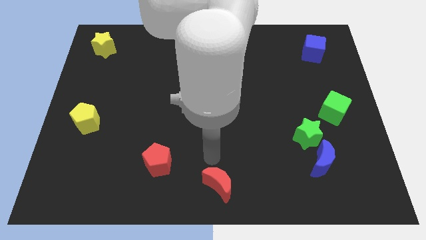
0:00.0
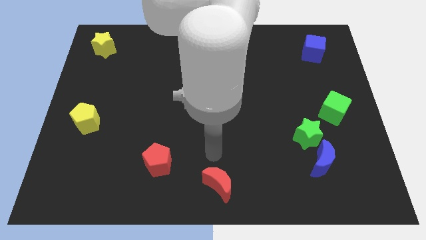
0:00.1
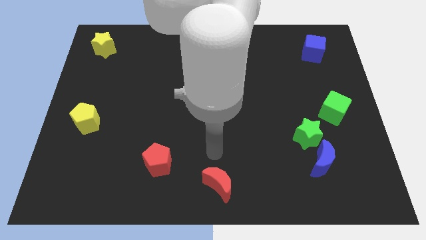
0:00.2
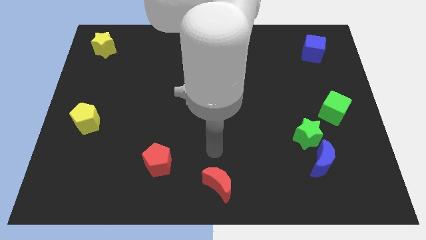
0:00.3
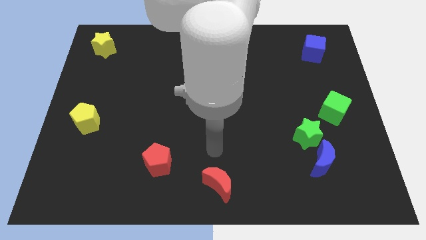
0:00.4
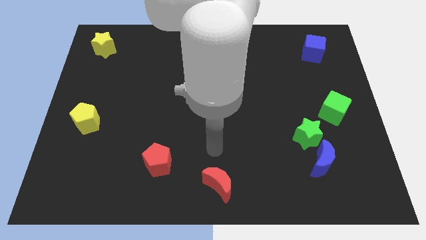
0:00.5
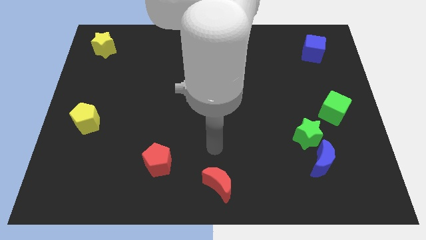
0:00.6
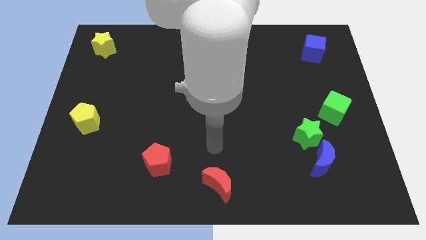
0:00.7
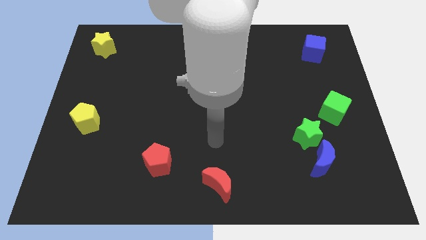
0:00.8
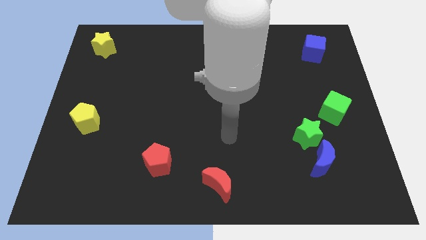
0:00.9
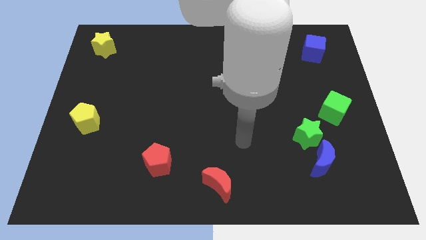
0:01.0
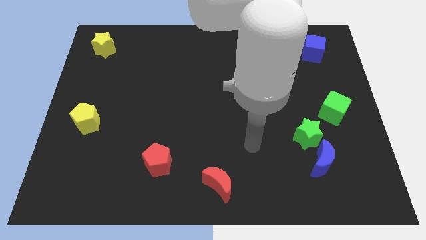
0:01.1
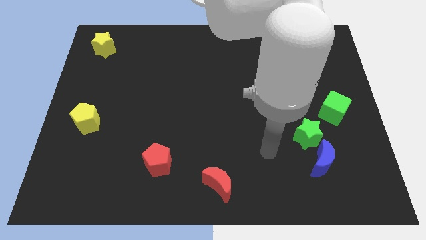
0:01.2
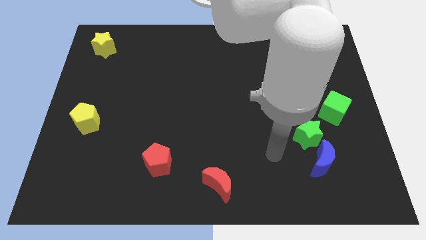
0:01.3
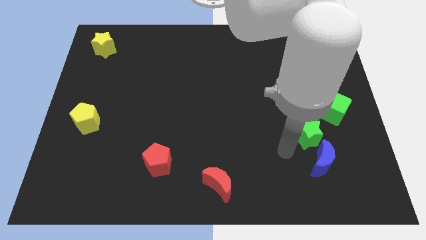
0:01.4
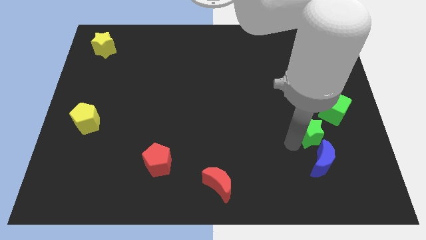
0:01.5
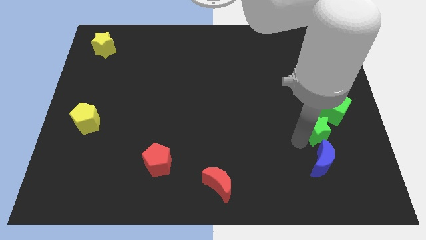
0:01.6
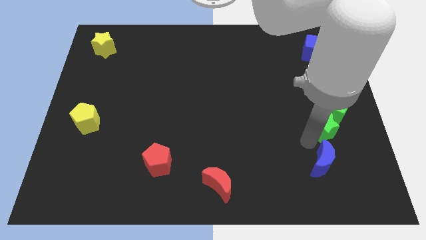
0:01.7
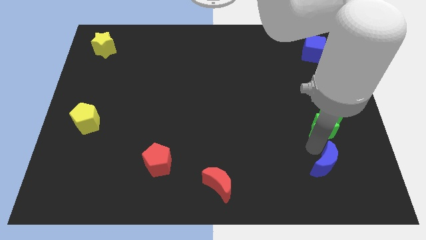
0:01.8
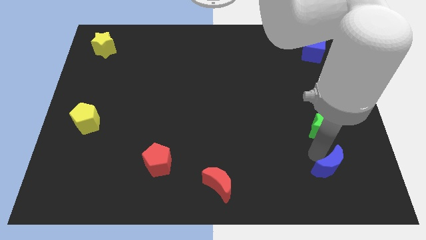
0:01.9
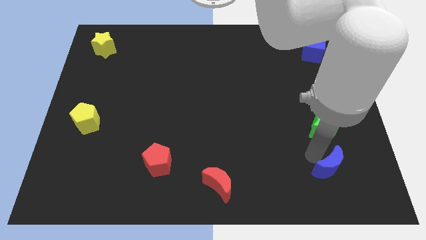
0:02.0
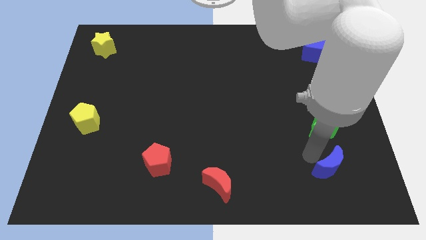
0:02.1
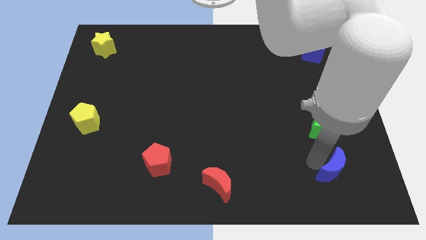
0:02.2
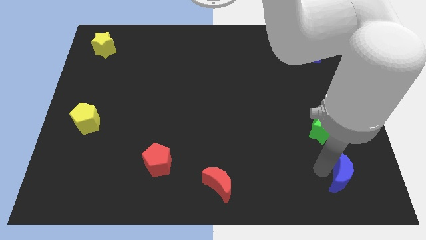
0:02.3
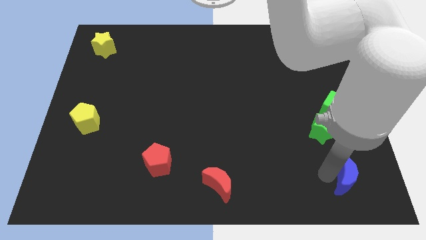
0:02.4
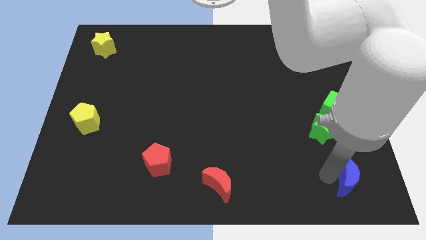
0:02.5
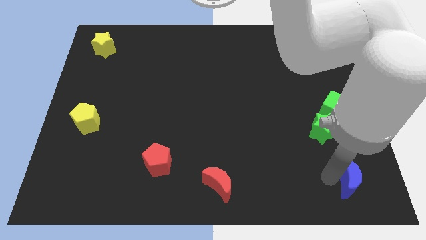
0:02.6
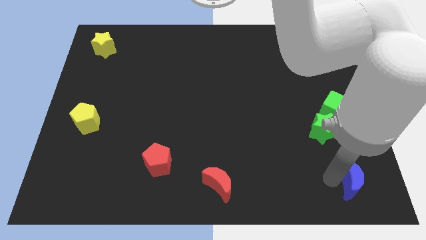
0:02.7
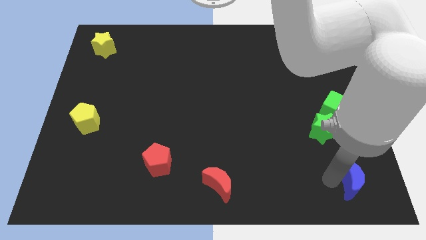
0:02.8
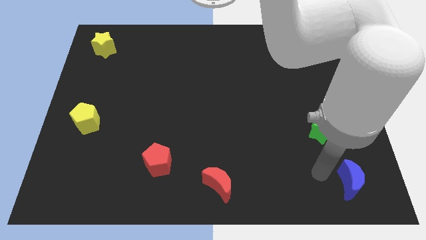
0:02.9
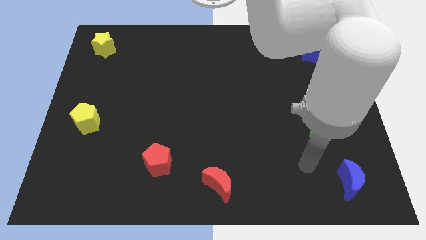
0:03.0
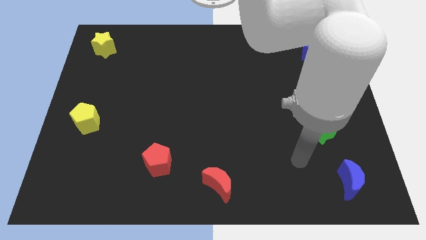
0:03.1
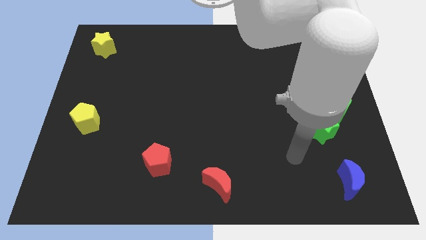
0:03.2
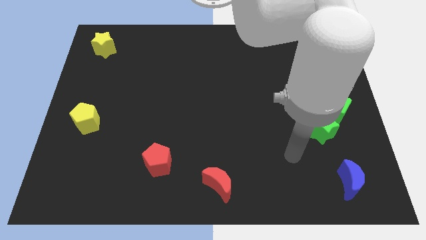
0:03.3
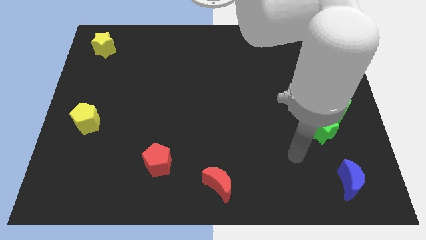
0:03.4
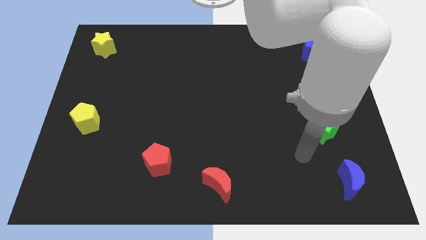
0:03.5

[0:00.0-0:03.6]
push the blue crescent towards the bottom right side of the board

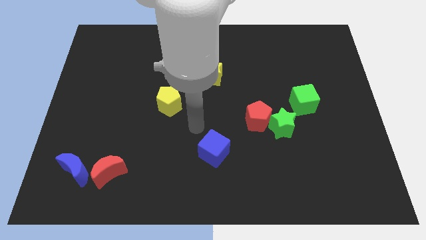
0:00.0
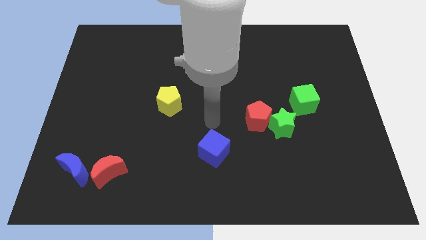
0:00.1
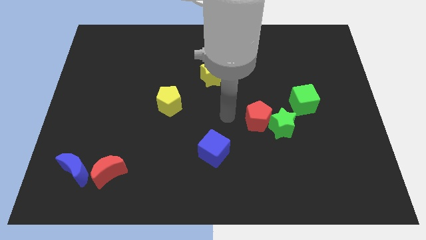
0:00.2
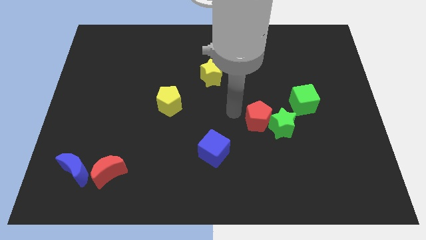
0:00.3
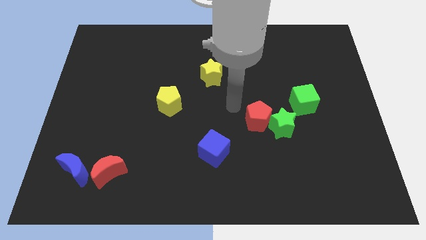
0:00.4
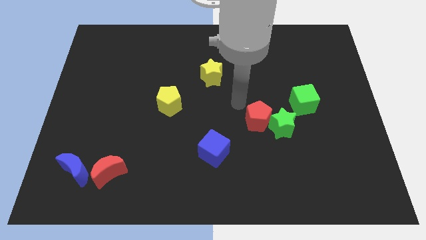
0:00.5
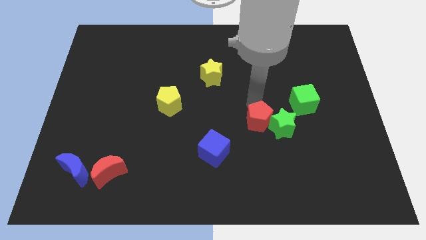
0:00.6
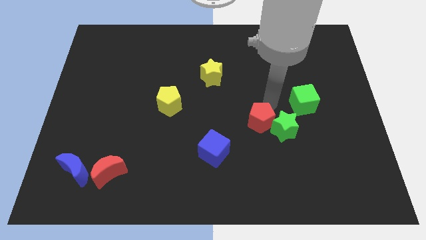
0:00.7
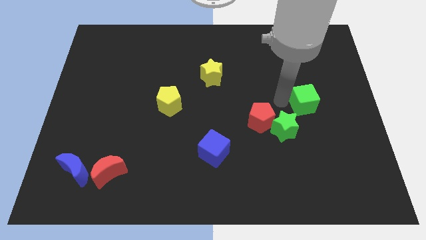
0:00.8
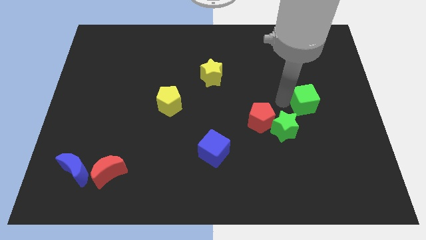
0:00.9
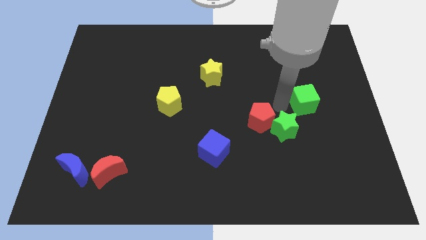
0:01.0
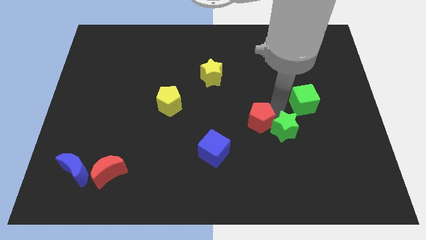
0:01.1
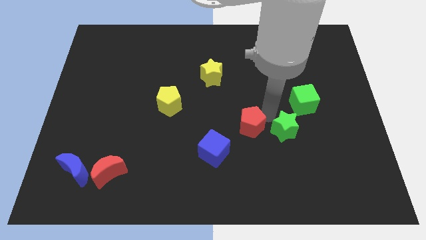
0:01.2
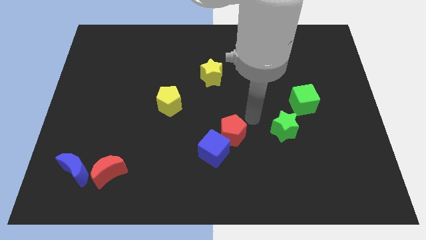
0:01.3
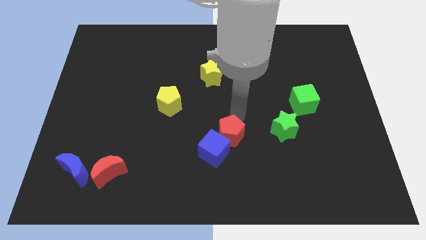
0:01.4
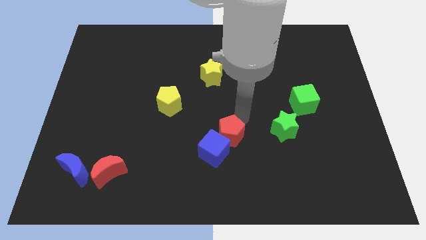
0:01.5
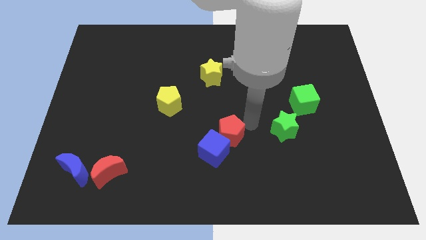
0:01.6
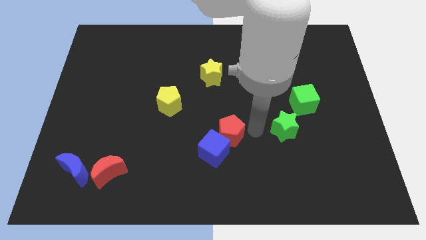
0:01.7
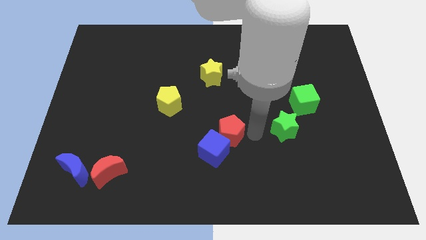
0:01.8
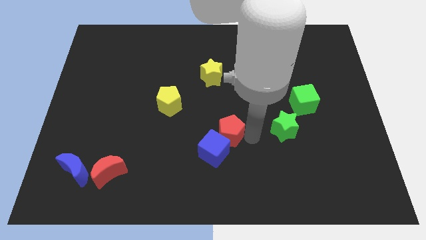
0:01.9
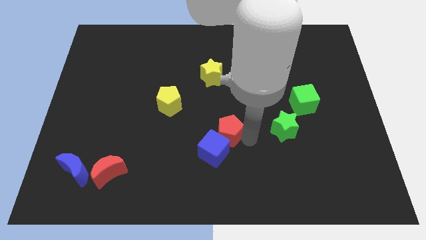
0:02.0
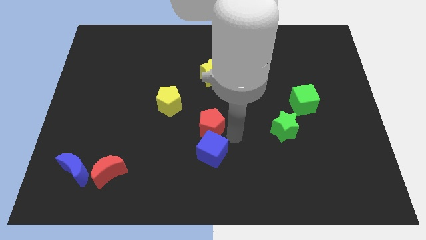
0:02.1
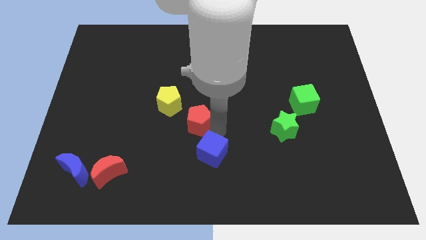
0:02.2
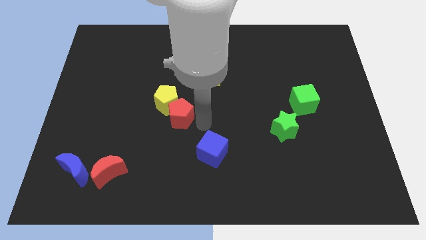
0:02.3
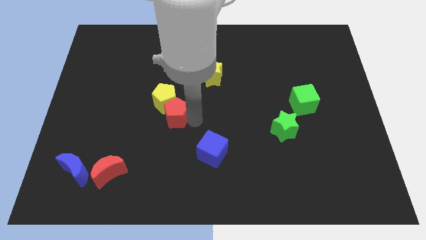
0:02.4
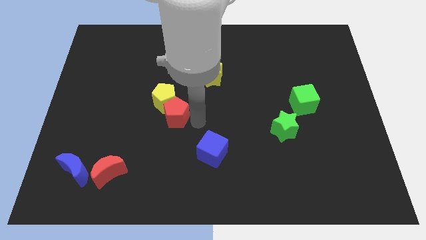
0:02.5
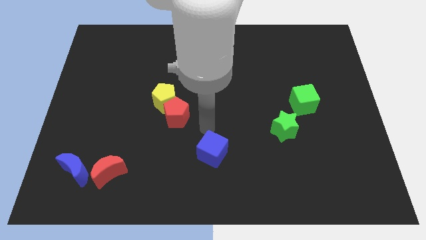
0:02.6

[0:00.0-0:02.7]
move red pentagon towards the yellow pentagon

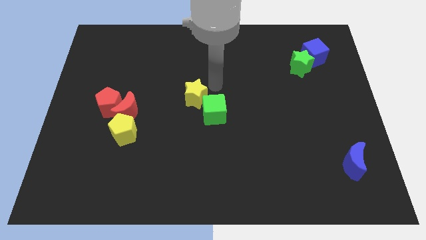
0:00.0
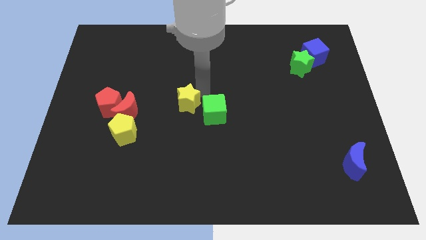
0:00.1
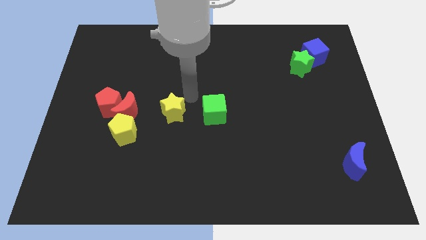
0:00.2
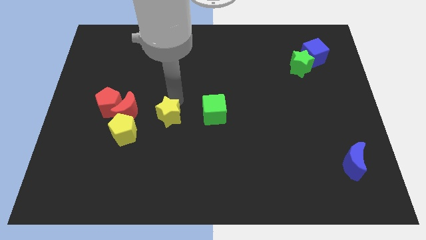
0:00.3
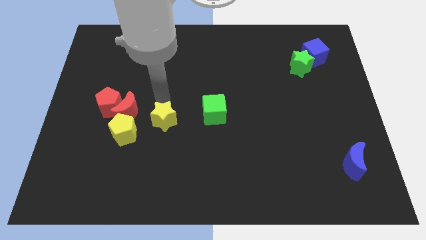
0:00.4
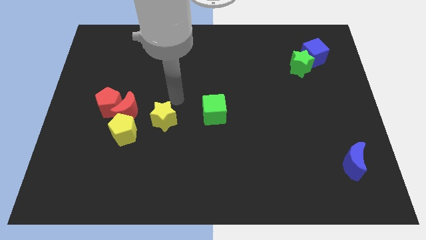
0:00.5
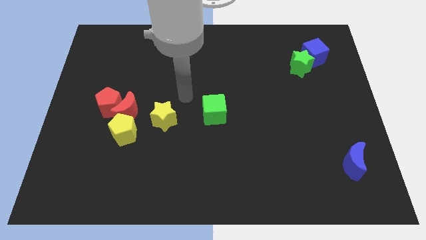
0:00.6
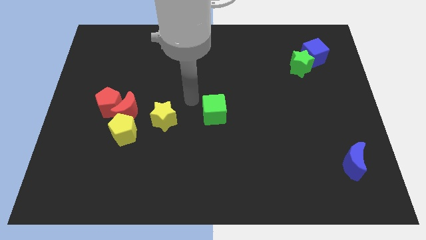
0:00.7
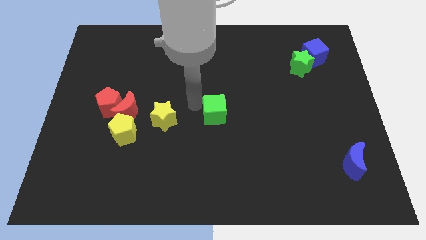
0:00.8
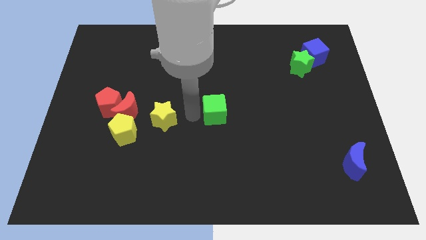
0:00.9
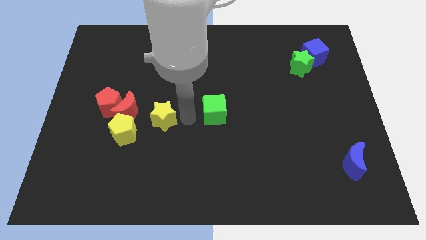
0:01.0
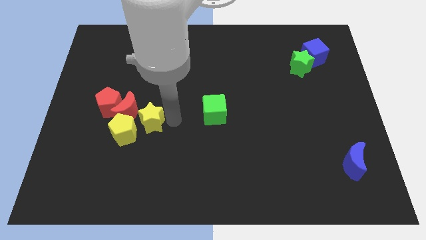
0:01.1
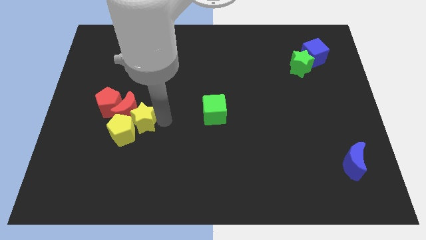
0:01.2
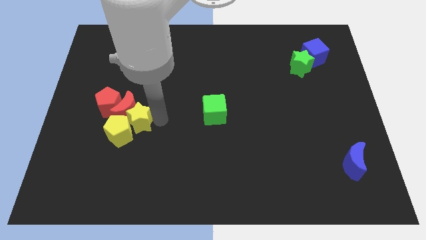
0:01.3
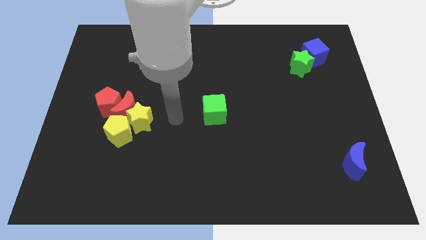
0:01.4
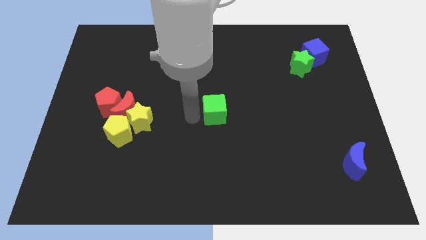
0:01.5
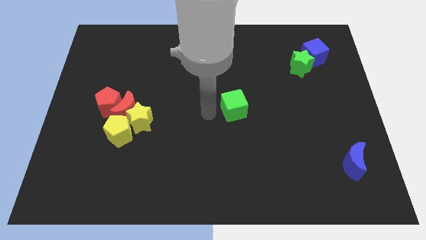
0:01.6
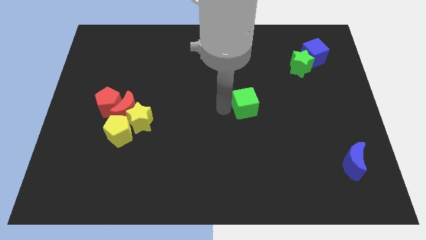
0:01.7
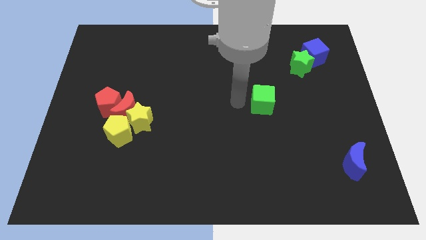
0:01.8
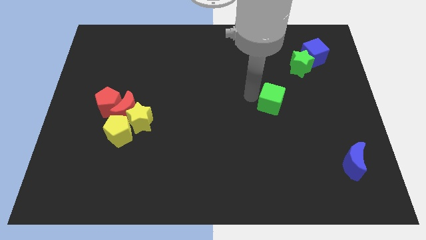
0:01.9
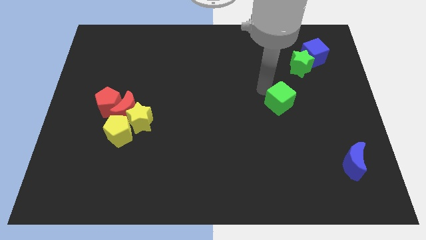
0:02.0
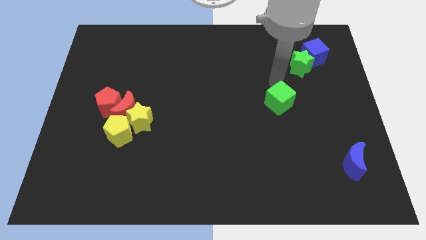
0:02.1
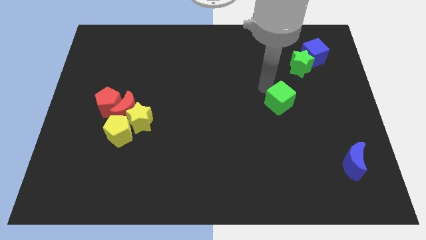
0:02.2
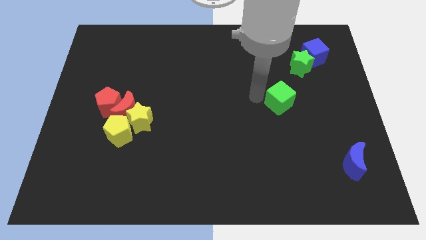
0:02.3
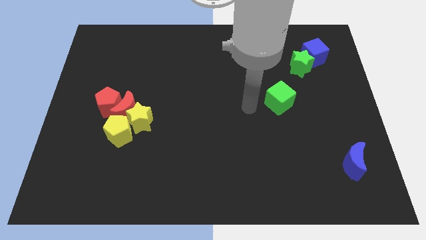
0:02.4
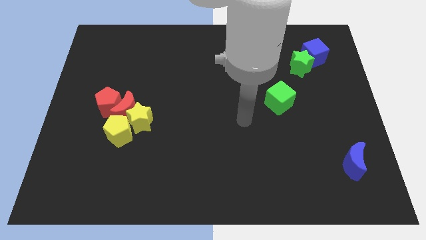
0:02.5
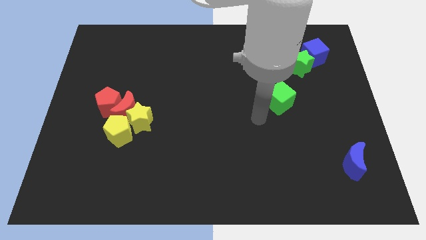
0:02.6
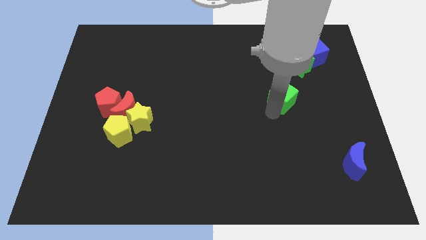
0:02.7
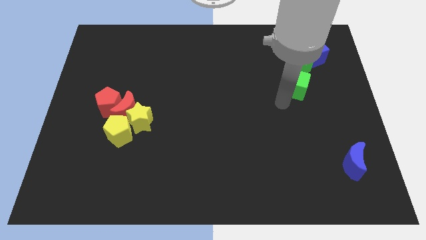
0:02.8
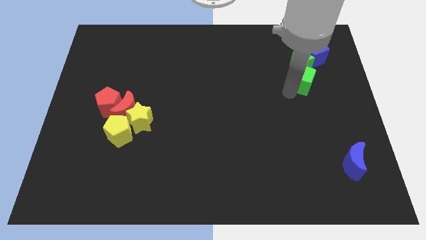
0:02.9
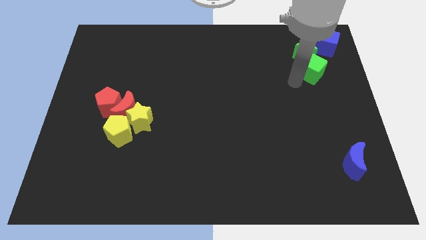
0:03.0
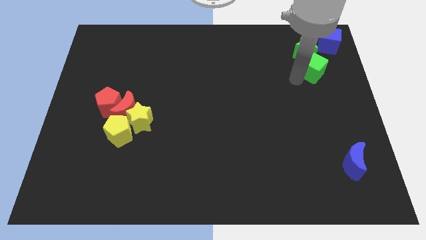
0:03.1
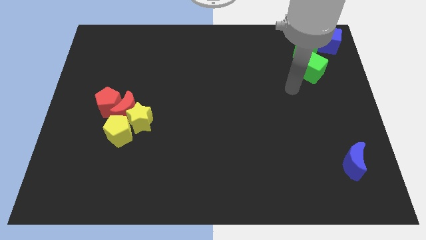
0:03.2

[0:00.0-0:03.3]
separate the yellow star and green cube by pushing away from the center of the board
